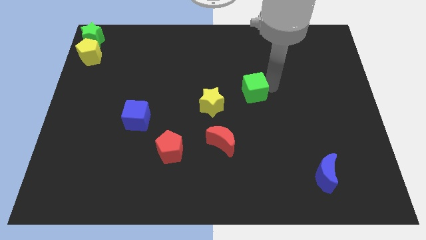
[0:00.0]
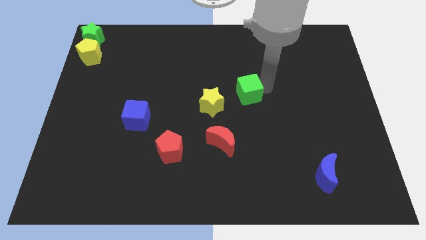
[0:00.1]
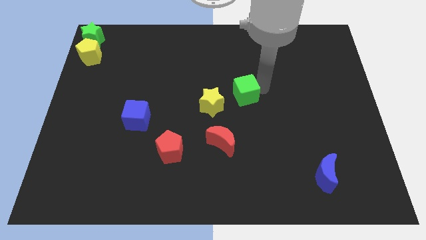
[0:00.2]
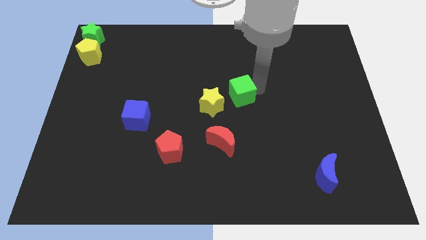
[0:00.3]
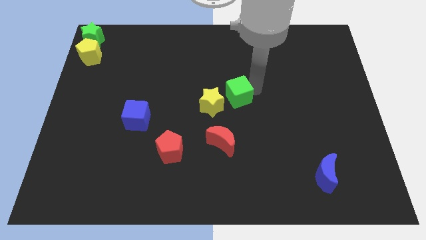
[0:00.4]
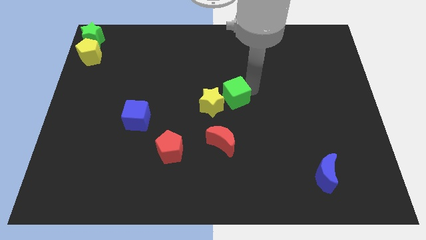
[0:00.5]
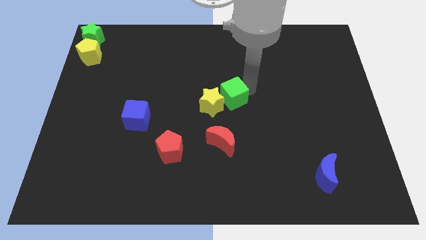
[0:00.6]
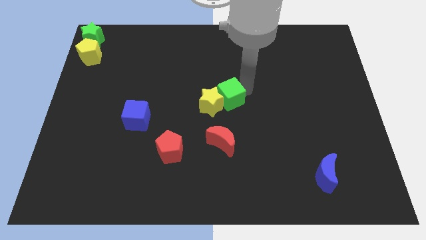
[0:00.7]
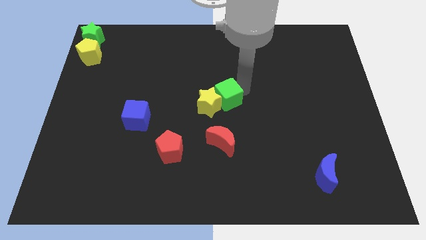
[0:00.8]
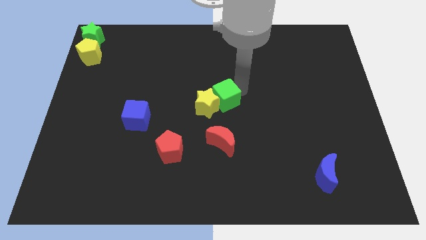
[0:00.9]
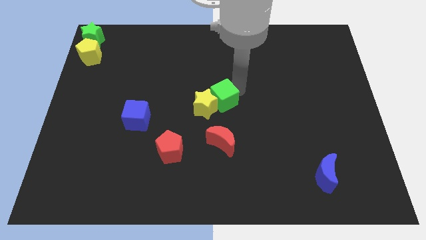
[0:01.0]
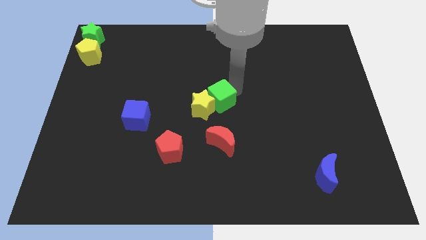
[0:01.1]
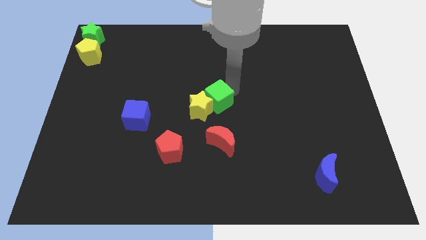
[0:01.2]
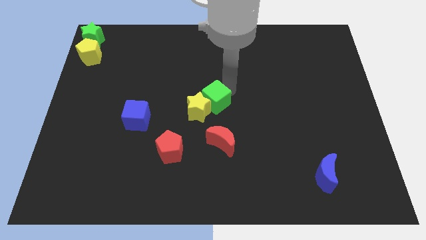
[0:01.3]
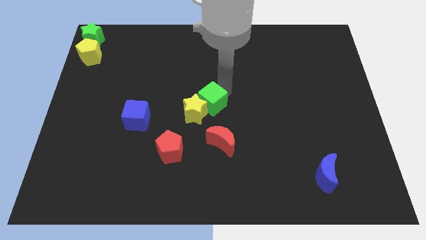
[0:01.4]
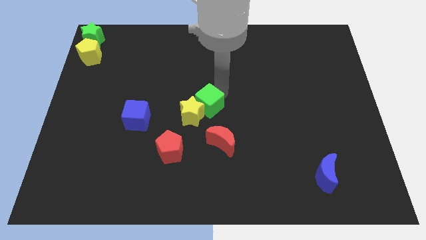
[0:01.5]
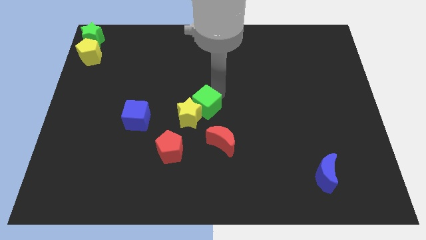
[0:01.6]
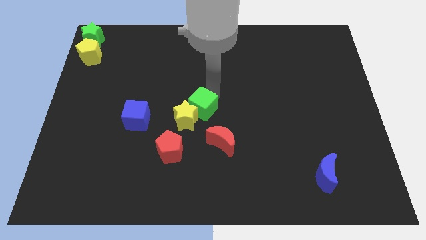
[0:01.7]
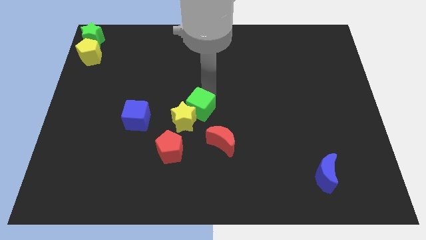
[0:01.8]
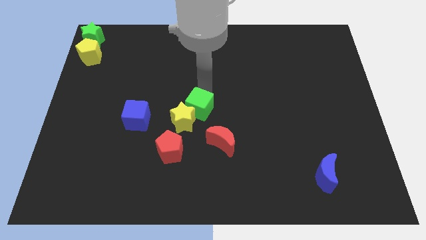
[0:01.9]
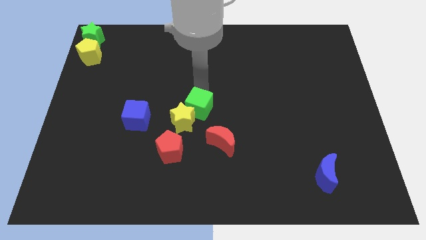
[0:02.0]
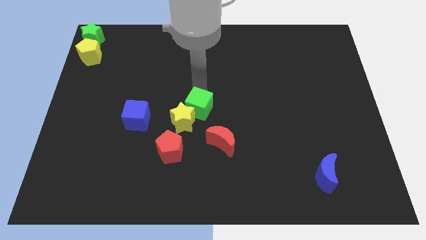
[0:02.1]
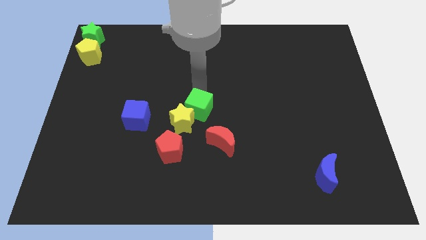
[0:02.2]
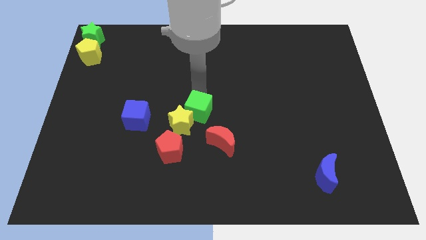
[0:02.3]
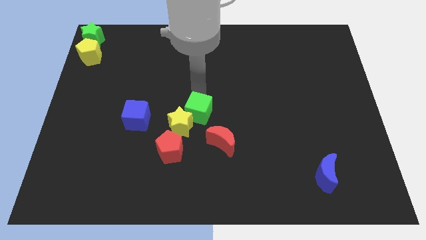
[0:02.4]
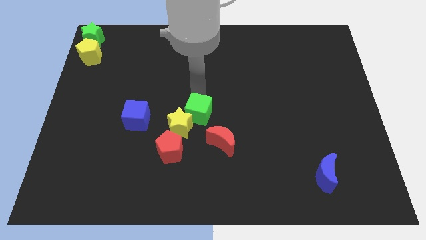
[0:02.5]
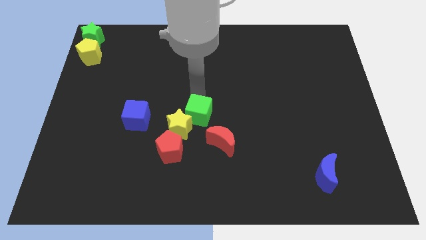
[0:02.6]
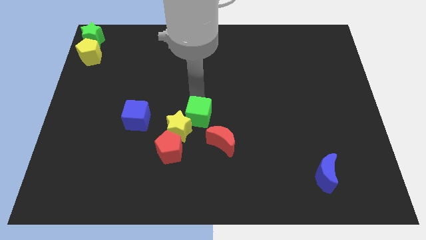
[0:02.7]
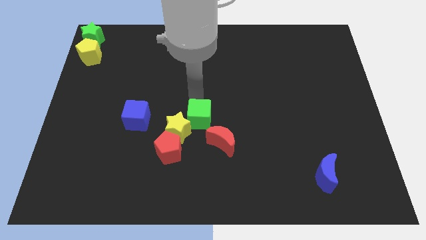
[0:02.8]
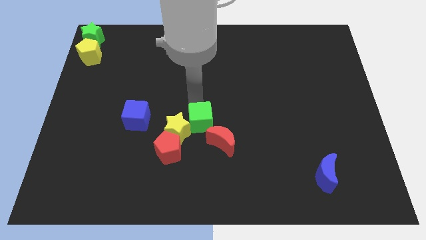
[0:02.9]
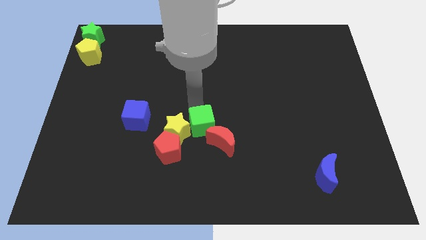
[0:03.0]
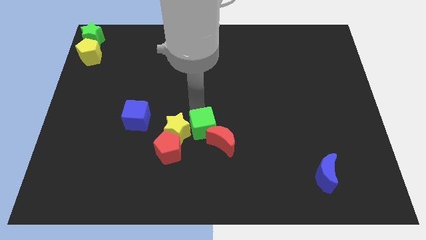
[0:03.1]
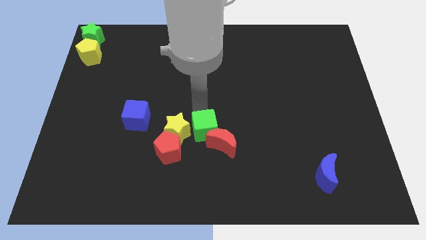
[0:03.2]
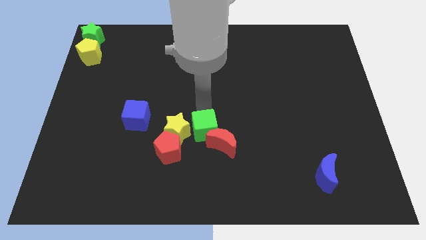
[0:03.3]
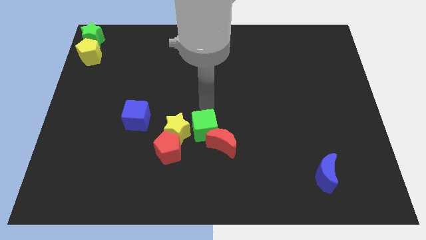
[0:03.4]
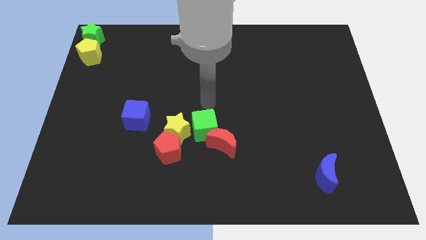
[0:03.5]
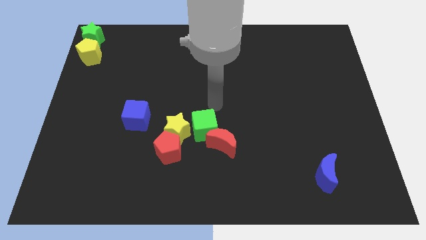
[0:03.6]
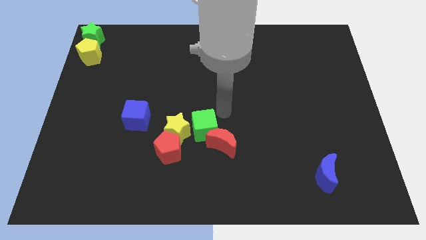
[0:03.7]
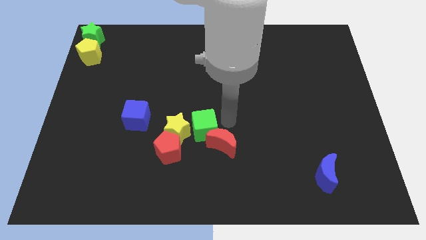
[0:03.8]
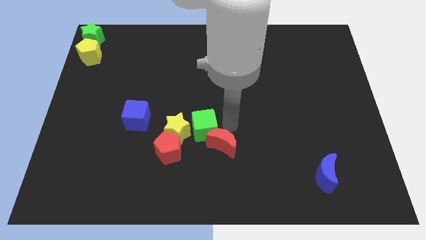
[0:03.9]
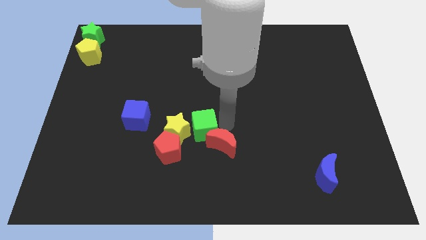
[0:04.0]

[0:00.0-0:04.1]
move green cube above red moon

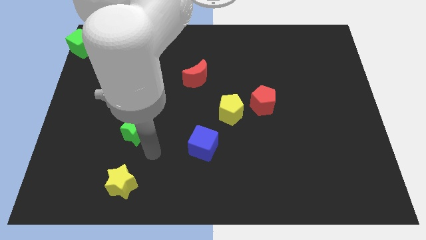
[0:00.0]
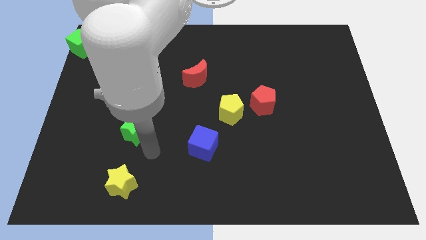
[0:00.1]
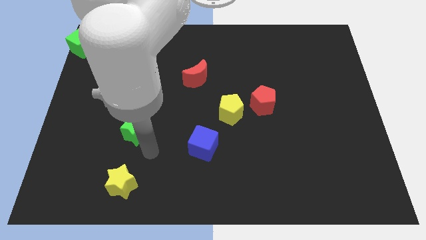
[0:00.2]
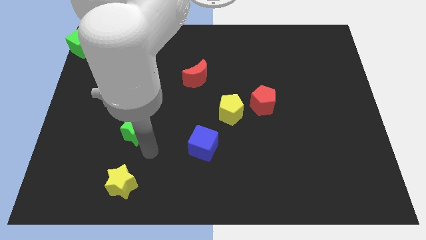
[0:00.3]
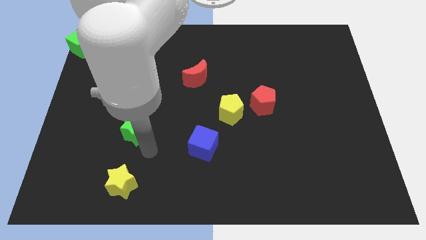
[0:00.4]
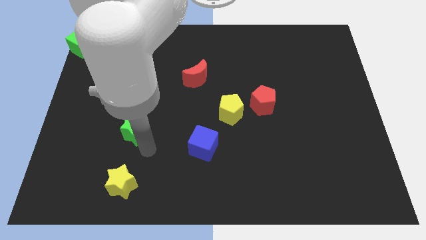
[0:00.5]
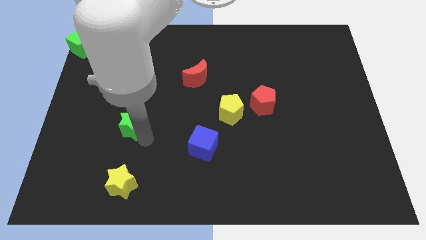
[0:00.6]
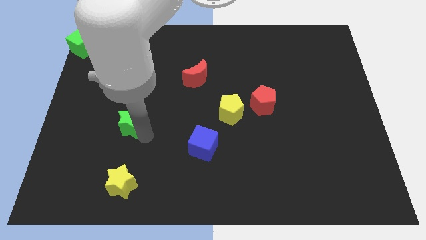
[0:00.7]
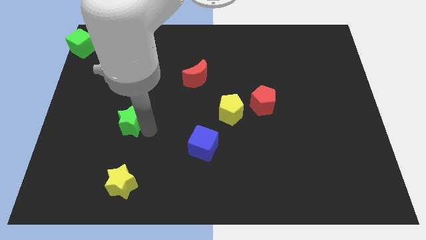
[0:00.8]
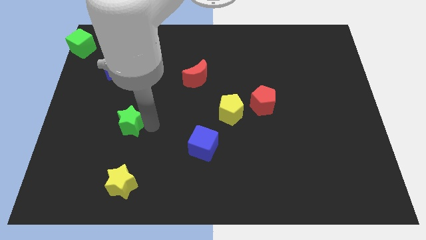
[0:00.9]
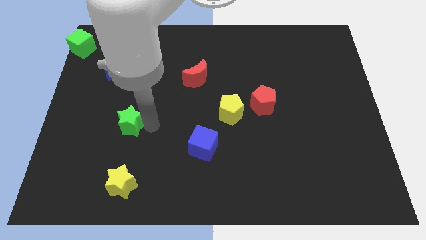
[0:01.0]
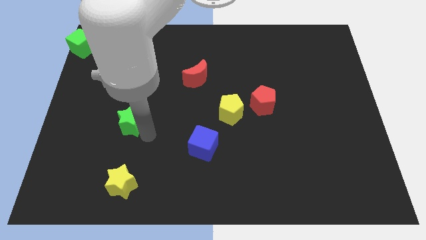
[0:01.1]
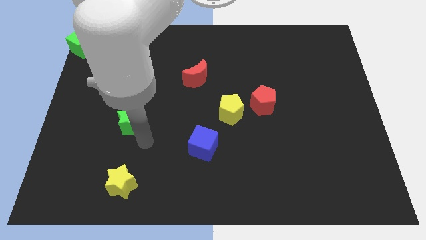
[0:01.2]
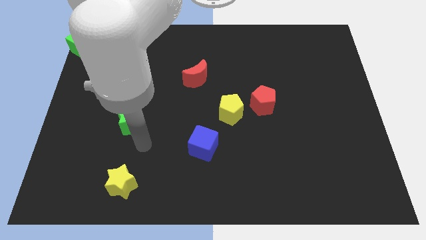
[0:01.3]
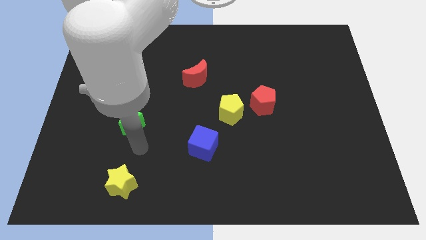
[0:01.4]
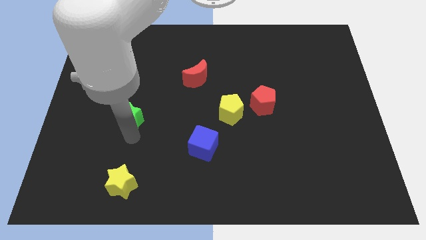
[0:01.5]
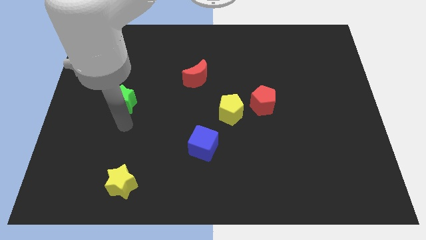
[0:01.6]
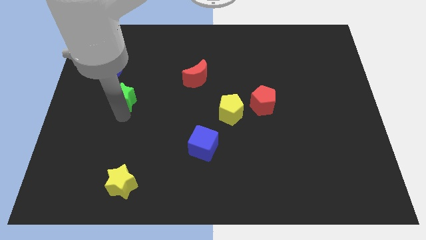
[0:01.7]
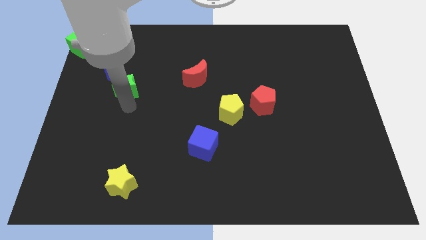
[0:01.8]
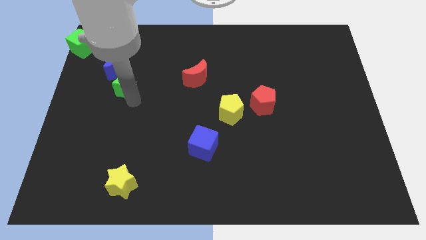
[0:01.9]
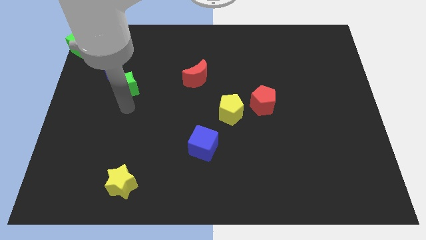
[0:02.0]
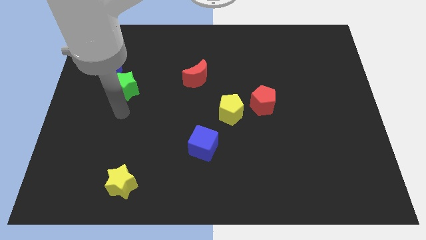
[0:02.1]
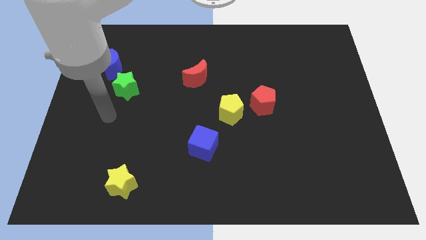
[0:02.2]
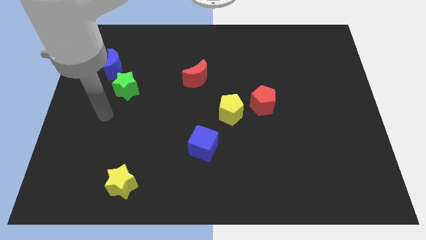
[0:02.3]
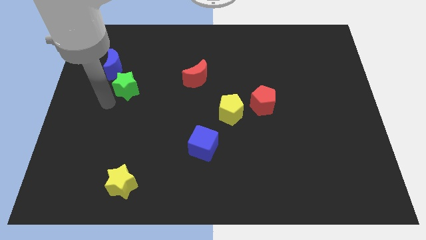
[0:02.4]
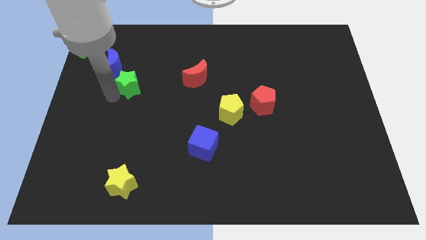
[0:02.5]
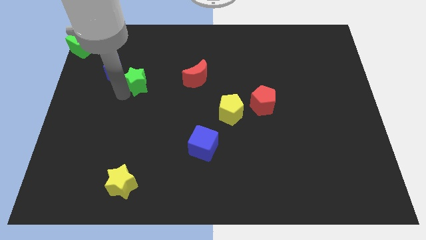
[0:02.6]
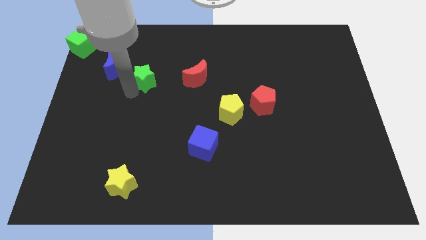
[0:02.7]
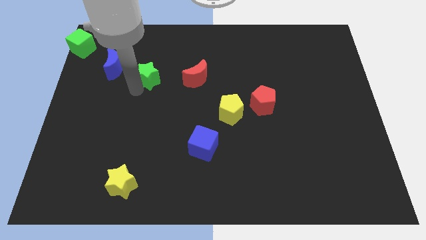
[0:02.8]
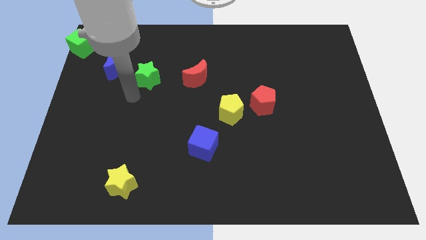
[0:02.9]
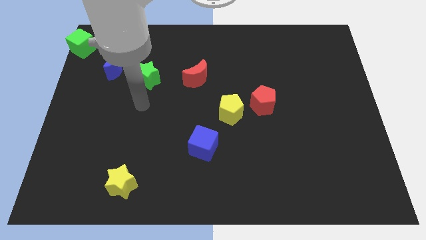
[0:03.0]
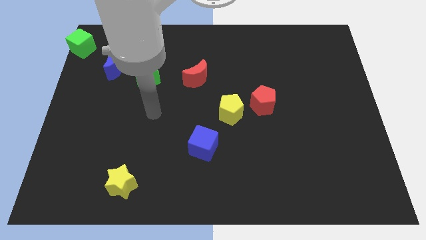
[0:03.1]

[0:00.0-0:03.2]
place the green star between the red and blue moon

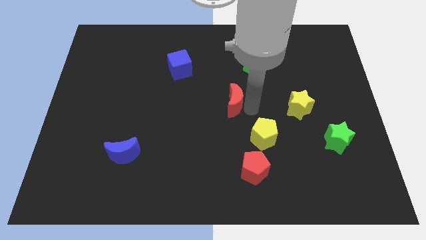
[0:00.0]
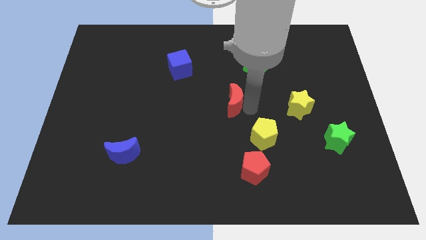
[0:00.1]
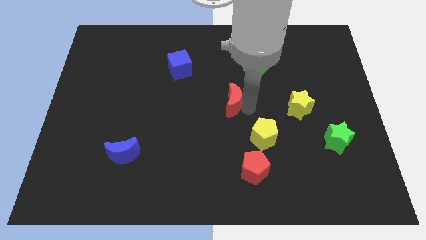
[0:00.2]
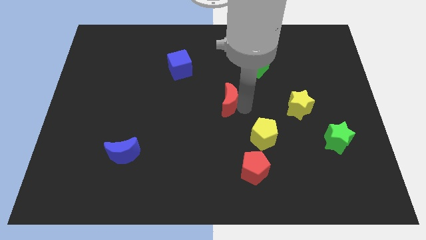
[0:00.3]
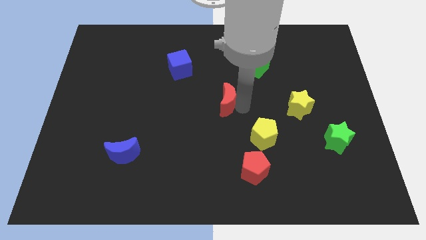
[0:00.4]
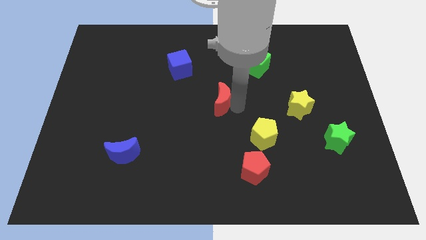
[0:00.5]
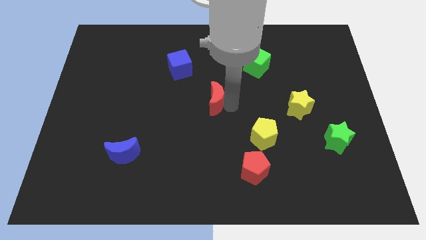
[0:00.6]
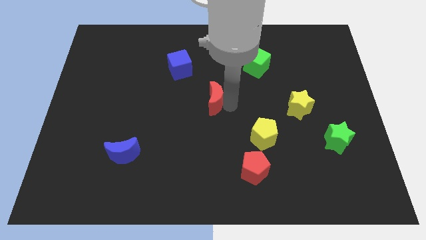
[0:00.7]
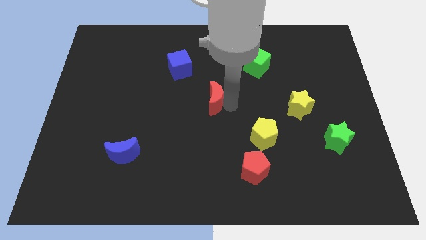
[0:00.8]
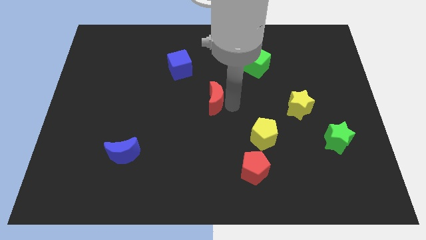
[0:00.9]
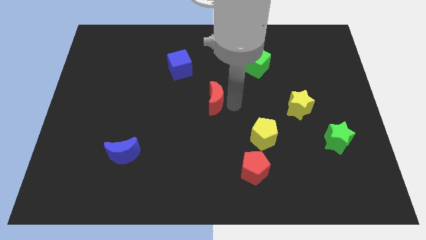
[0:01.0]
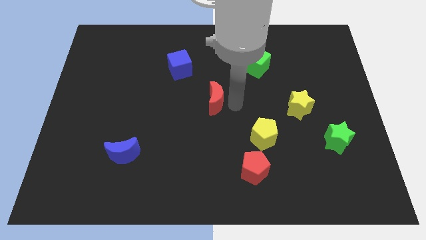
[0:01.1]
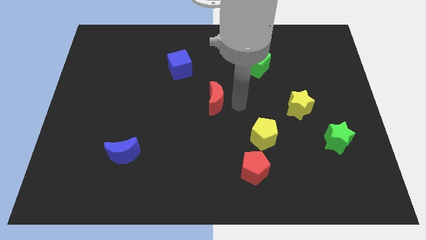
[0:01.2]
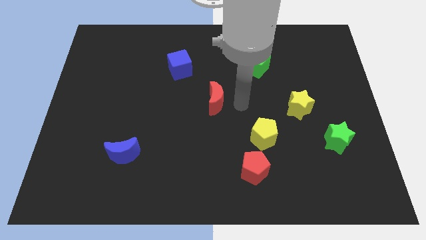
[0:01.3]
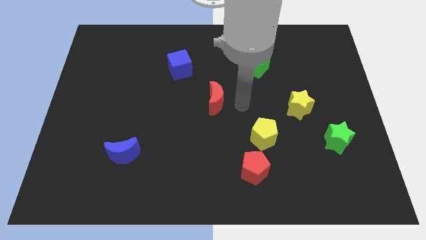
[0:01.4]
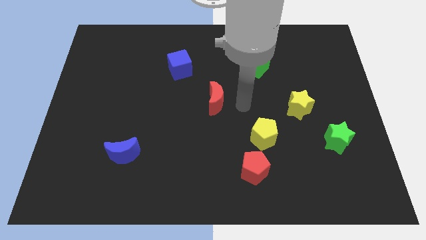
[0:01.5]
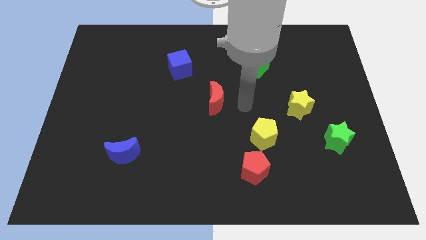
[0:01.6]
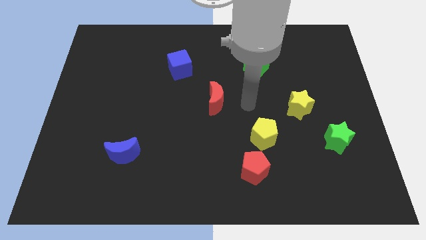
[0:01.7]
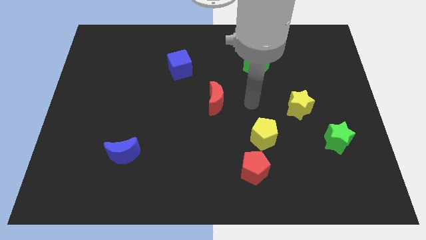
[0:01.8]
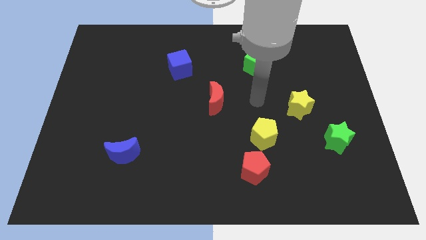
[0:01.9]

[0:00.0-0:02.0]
move red moon to the center
